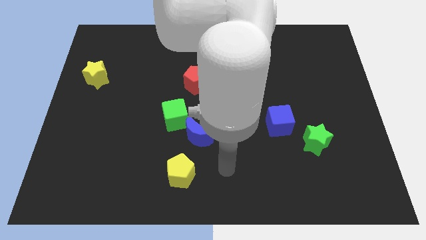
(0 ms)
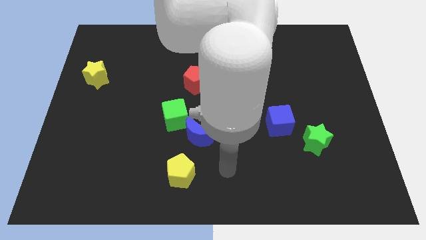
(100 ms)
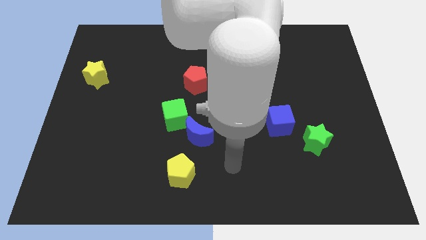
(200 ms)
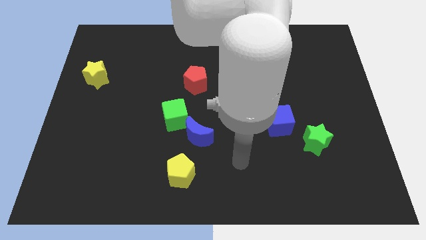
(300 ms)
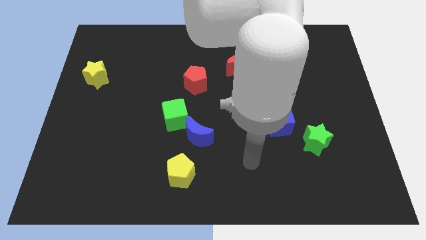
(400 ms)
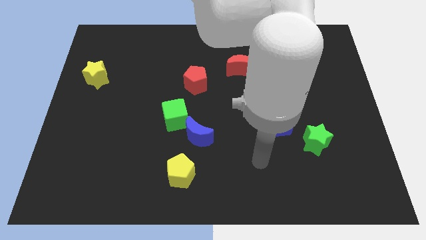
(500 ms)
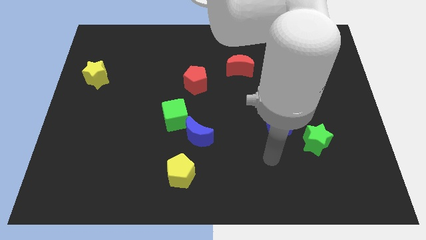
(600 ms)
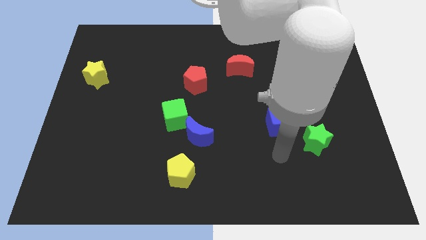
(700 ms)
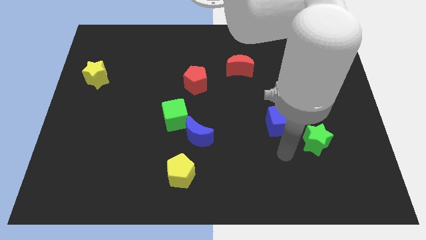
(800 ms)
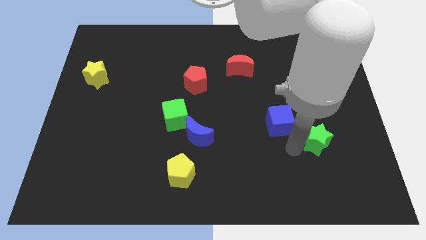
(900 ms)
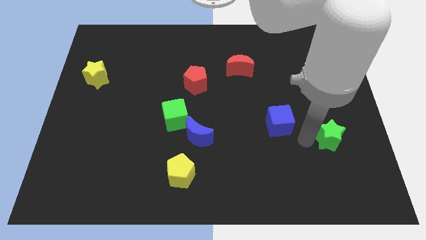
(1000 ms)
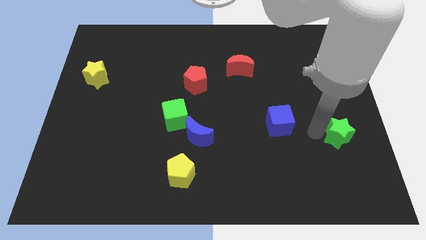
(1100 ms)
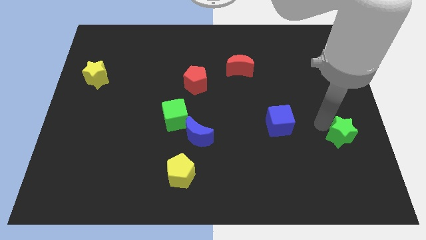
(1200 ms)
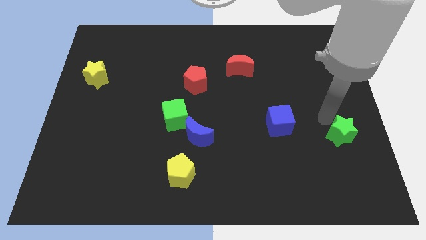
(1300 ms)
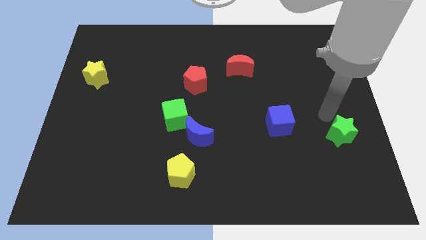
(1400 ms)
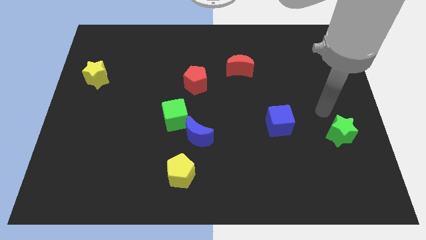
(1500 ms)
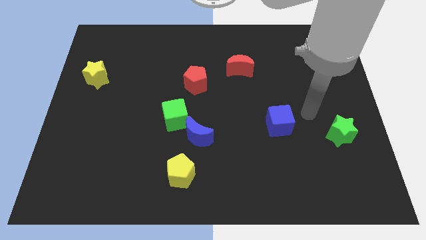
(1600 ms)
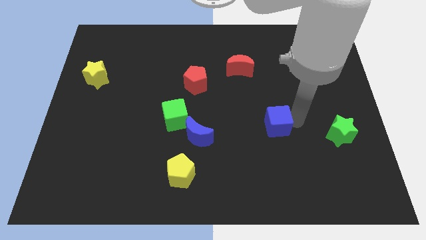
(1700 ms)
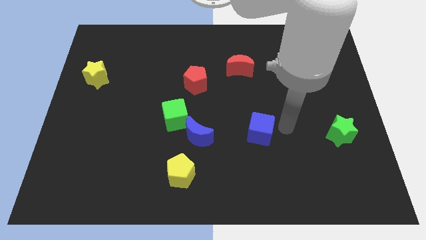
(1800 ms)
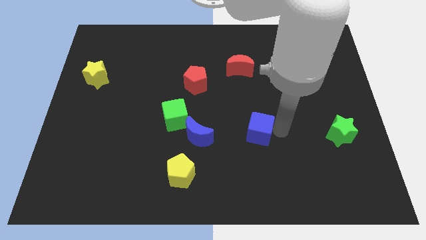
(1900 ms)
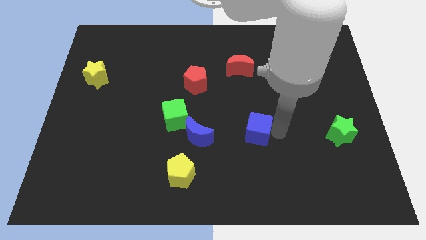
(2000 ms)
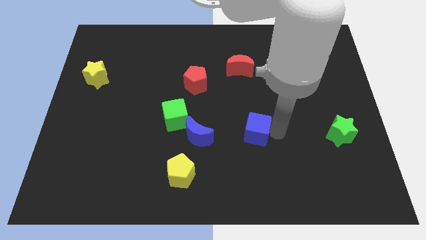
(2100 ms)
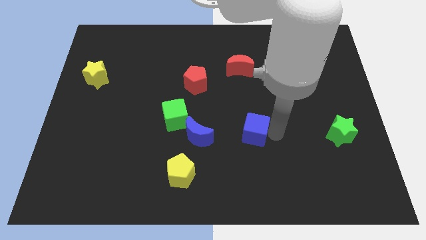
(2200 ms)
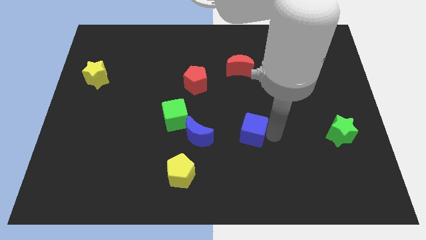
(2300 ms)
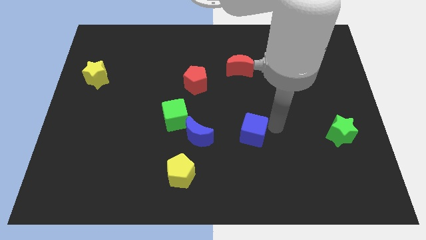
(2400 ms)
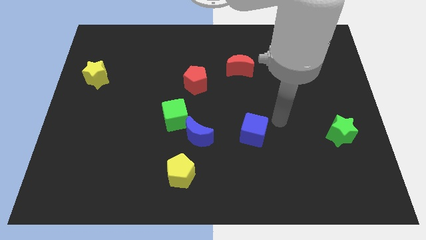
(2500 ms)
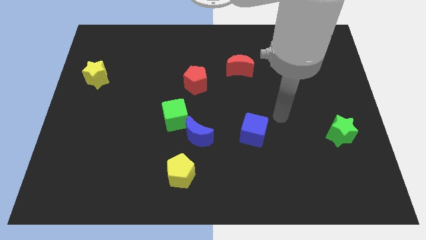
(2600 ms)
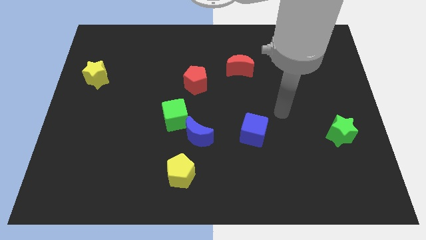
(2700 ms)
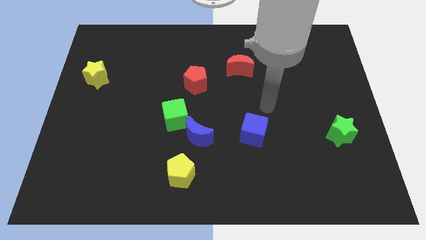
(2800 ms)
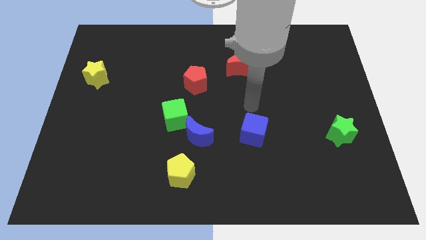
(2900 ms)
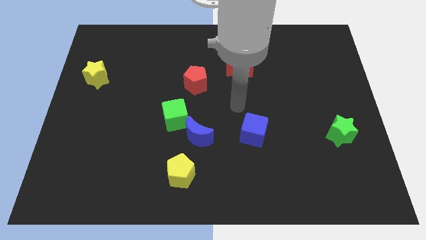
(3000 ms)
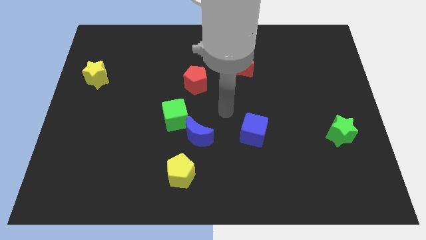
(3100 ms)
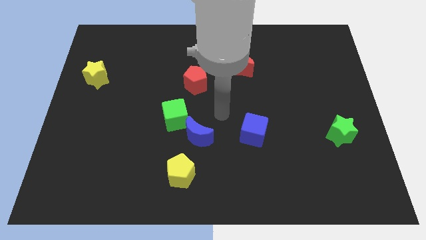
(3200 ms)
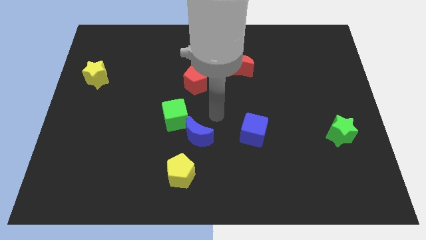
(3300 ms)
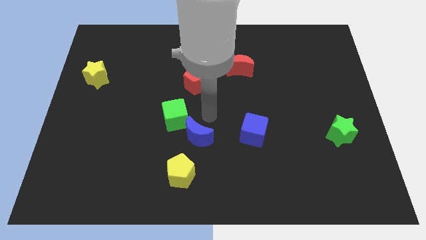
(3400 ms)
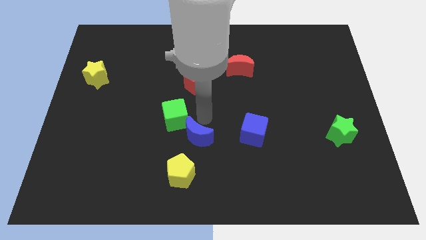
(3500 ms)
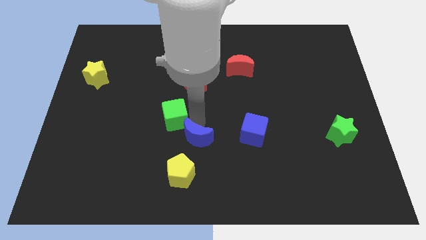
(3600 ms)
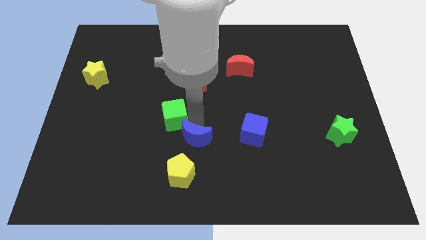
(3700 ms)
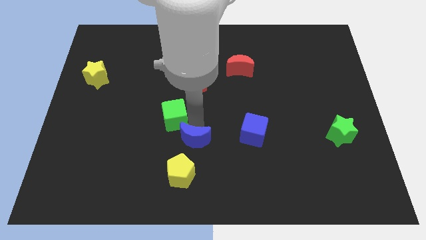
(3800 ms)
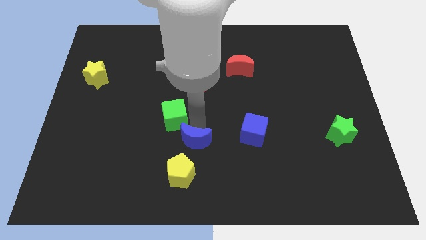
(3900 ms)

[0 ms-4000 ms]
place the blue blocks and the green star in a horizontal line

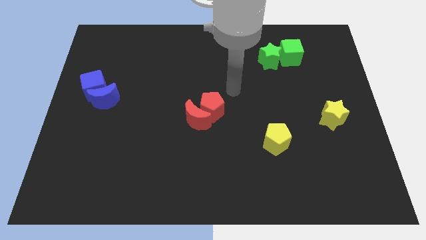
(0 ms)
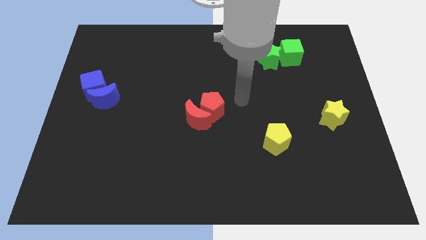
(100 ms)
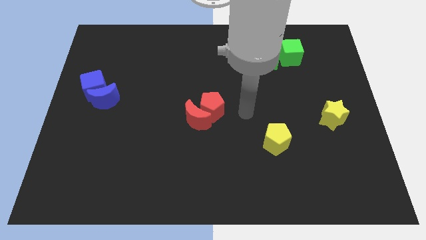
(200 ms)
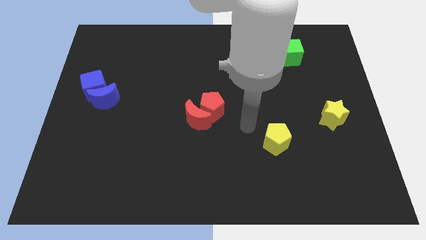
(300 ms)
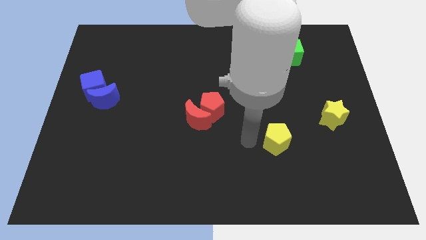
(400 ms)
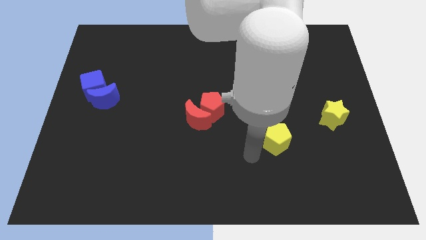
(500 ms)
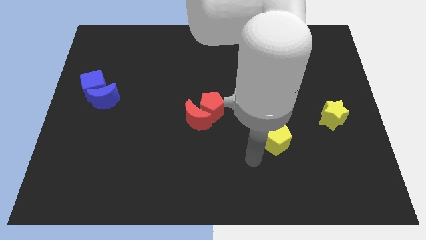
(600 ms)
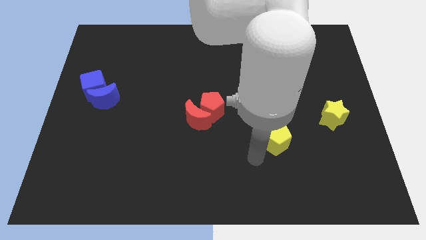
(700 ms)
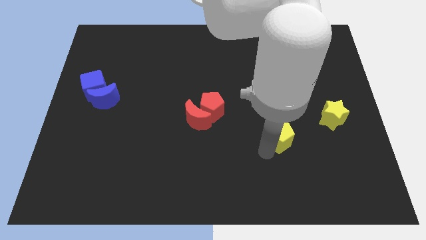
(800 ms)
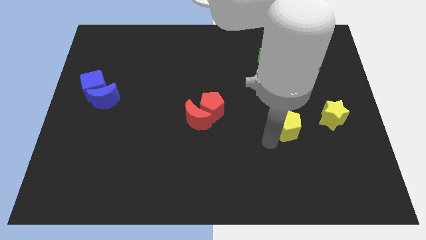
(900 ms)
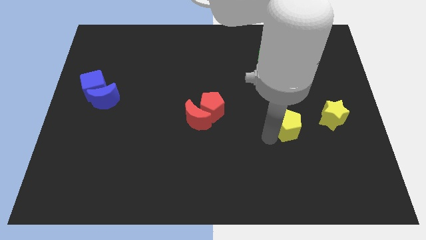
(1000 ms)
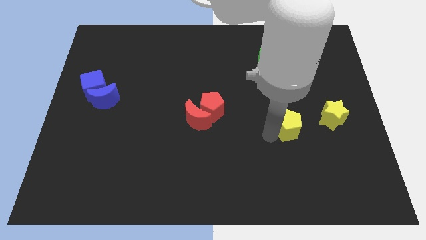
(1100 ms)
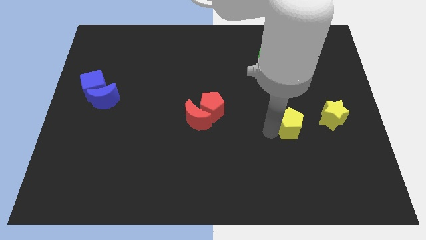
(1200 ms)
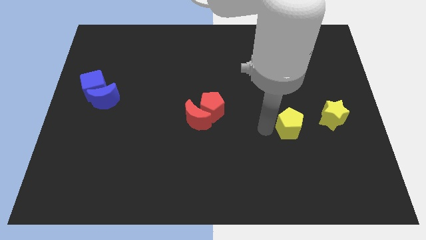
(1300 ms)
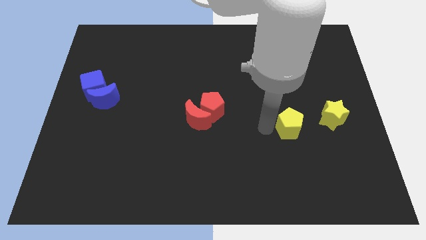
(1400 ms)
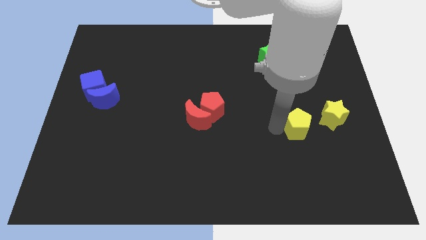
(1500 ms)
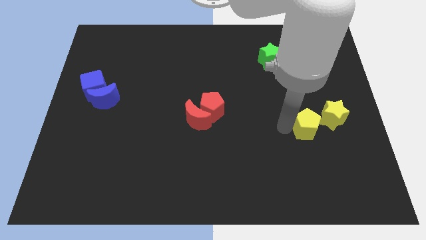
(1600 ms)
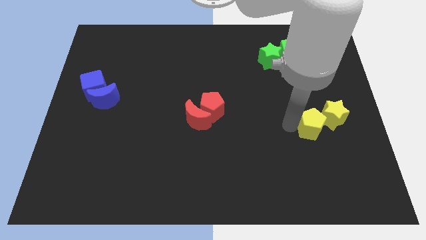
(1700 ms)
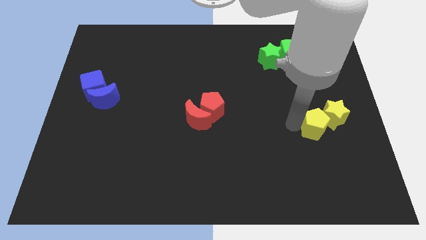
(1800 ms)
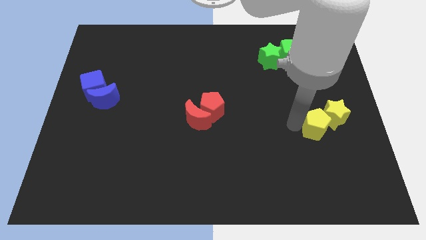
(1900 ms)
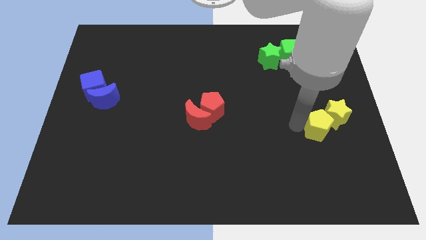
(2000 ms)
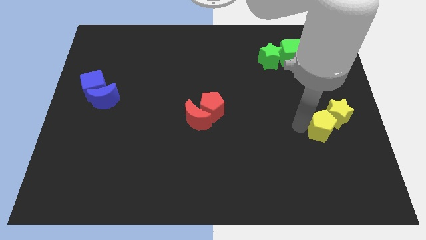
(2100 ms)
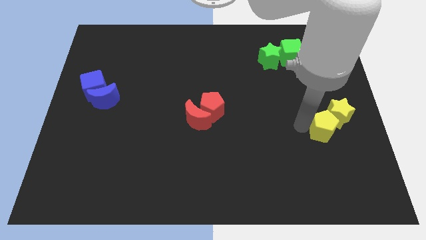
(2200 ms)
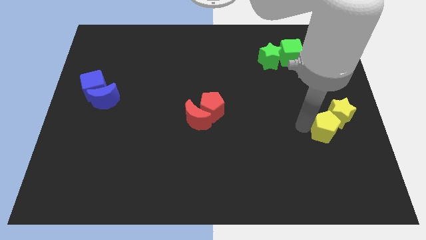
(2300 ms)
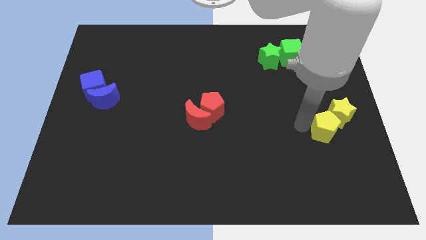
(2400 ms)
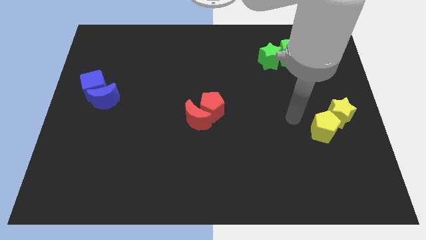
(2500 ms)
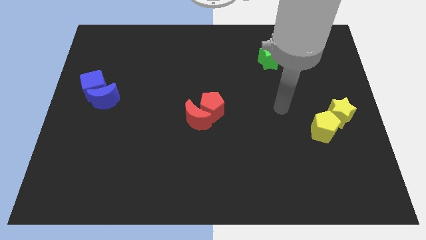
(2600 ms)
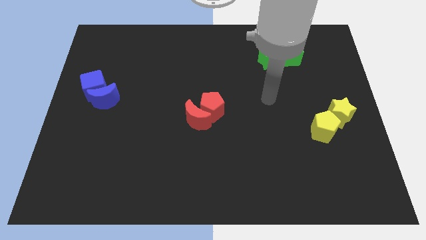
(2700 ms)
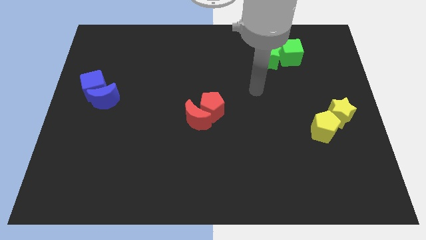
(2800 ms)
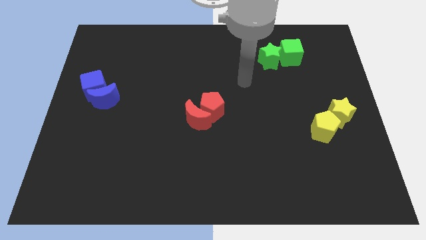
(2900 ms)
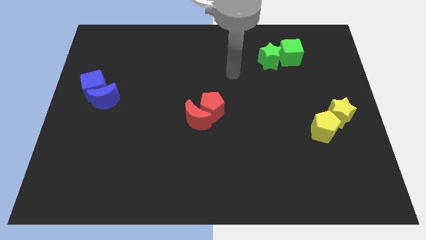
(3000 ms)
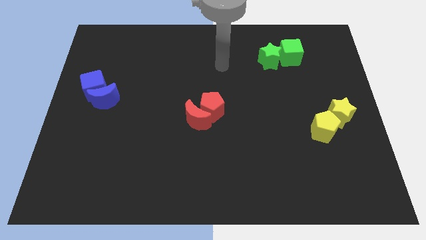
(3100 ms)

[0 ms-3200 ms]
push the yellow pentagon into the yellow star

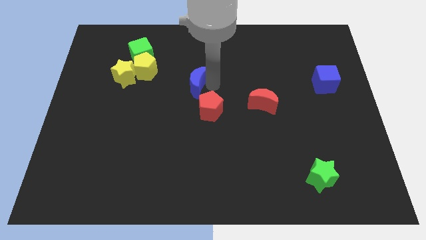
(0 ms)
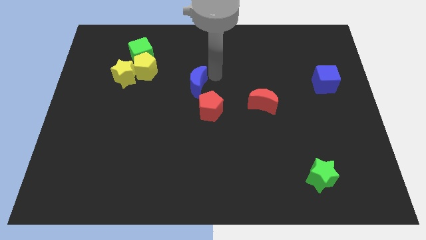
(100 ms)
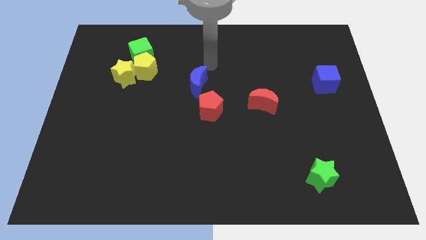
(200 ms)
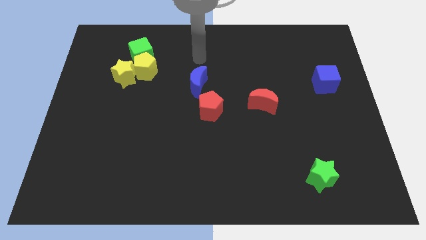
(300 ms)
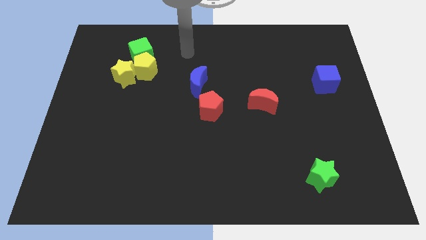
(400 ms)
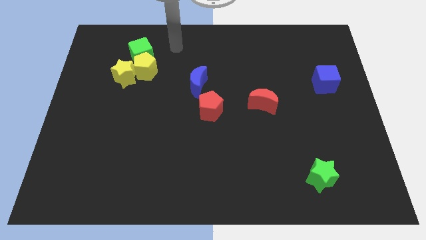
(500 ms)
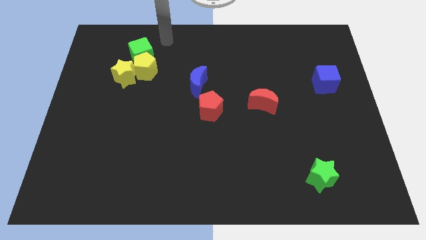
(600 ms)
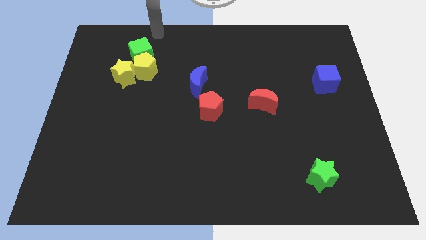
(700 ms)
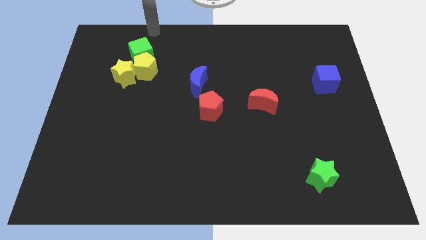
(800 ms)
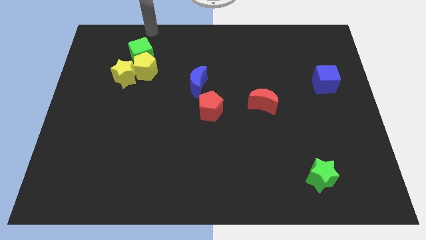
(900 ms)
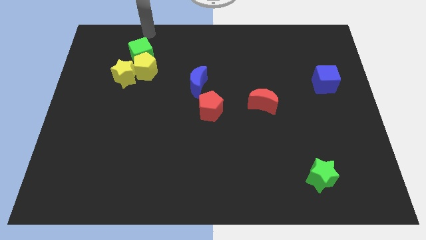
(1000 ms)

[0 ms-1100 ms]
move your arm to the top of the green cube

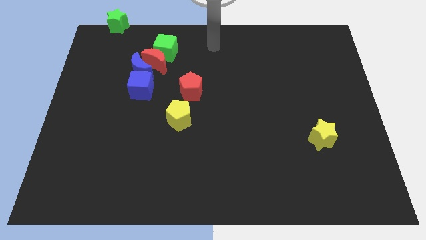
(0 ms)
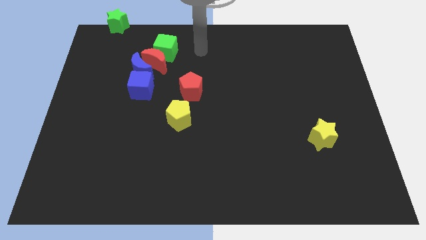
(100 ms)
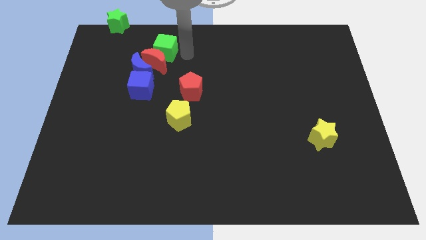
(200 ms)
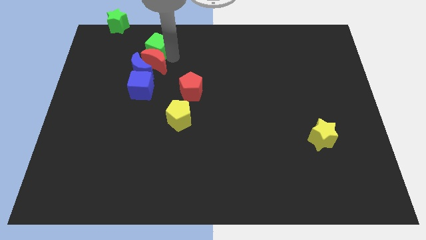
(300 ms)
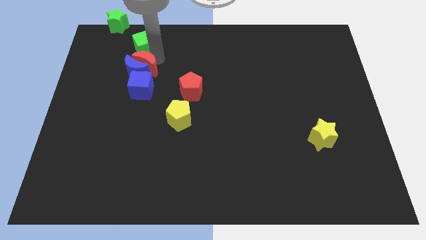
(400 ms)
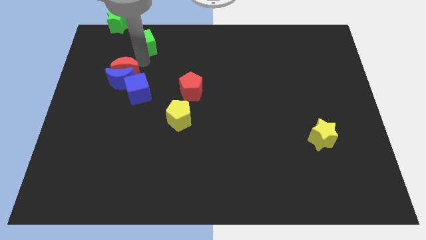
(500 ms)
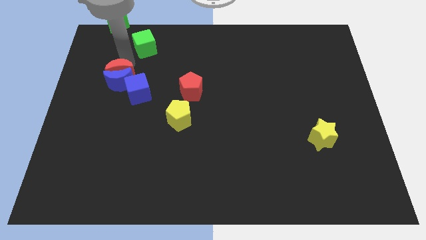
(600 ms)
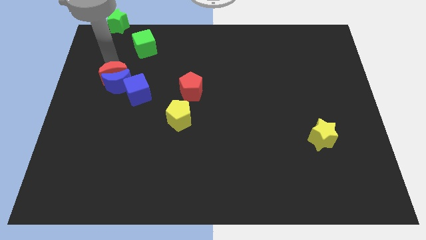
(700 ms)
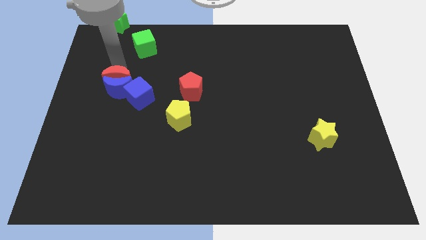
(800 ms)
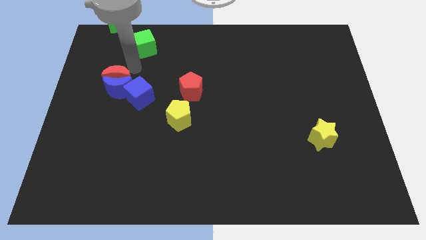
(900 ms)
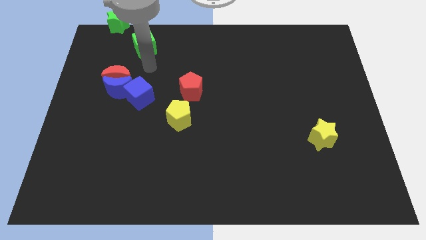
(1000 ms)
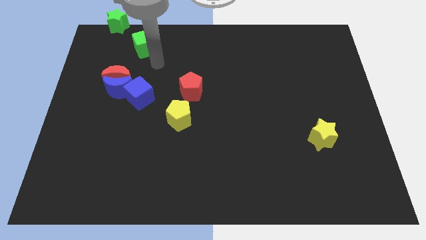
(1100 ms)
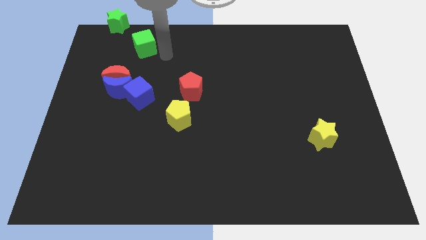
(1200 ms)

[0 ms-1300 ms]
move red moon from green cube
